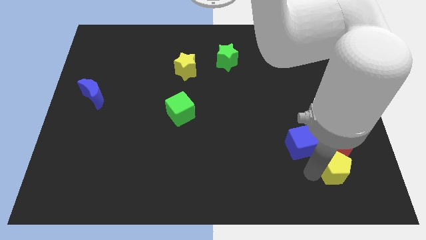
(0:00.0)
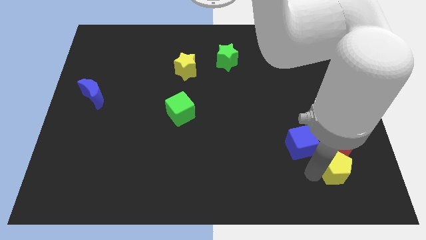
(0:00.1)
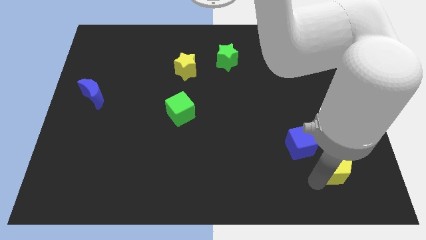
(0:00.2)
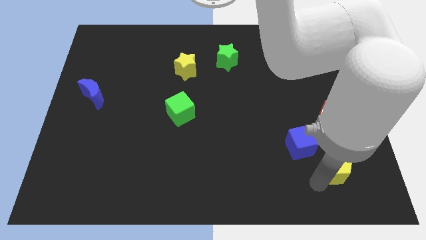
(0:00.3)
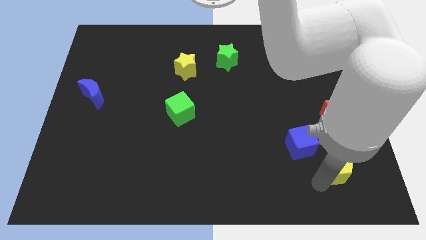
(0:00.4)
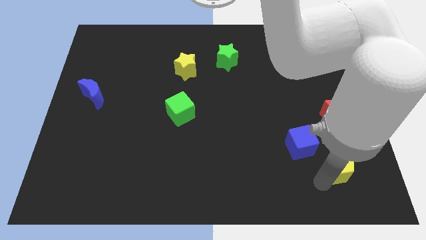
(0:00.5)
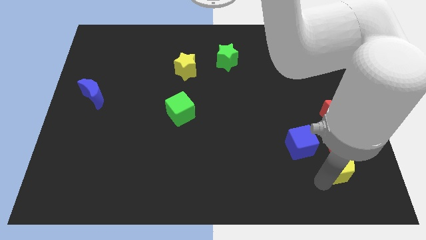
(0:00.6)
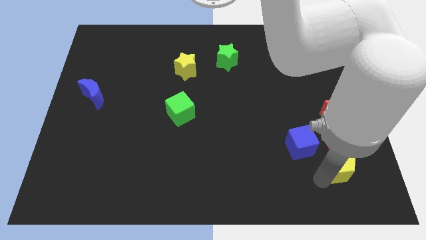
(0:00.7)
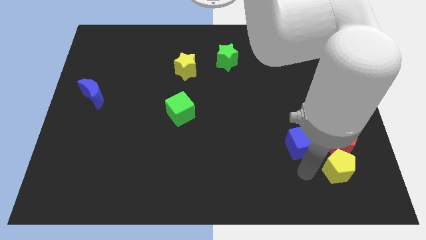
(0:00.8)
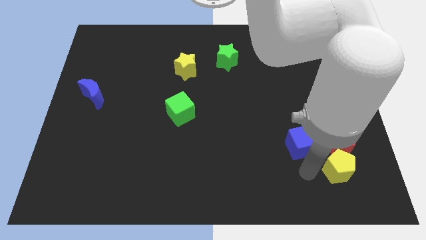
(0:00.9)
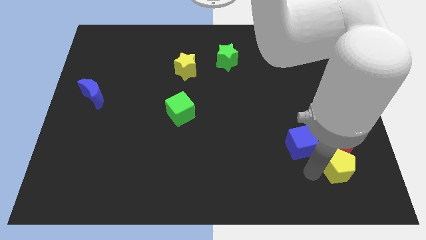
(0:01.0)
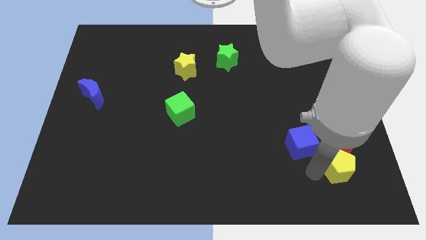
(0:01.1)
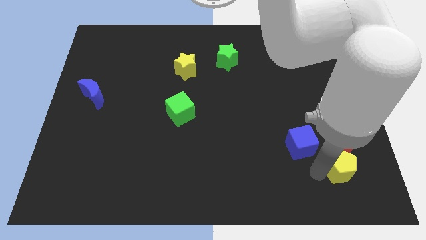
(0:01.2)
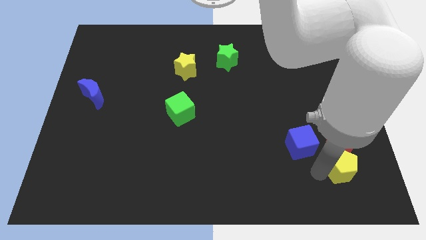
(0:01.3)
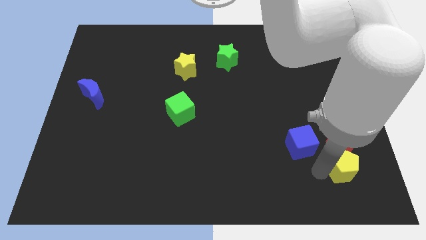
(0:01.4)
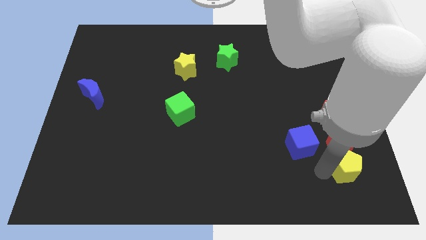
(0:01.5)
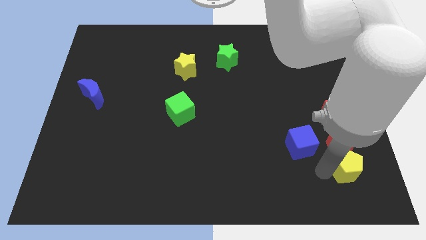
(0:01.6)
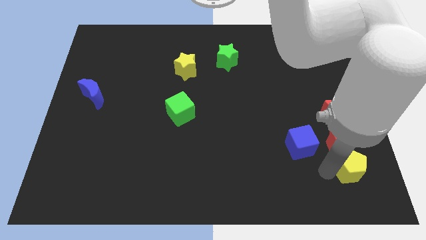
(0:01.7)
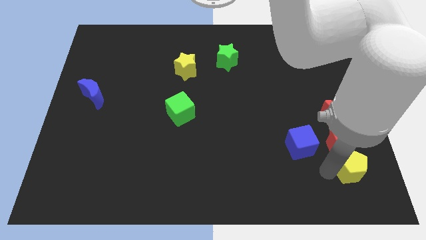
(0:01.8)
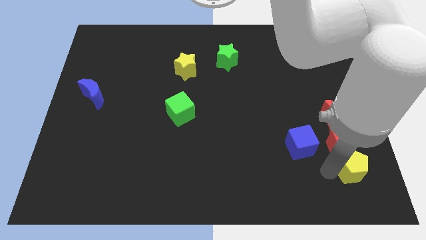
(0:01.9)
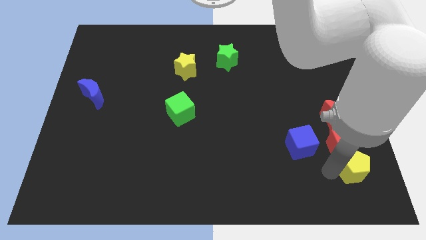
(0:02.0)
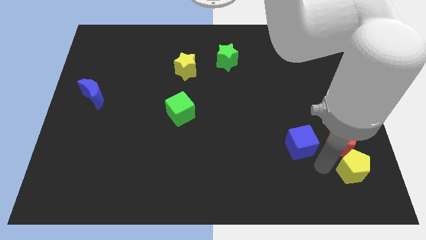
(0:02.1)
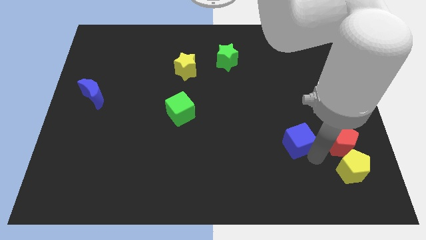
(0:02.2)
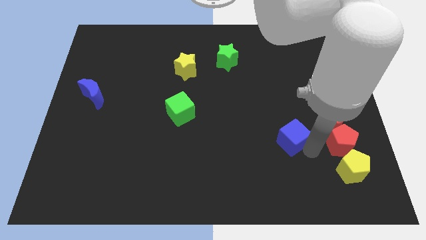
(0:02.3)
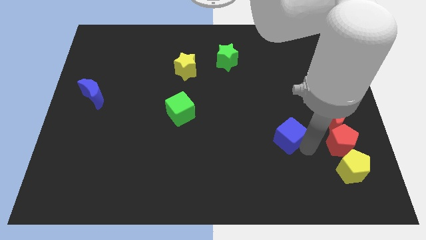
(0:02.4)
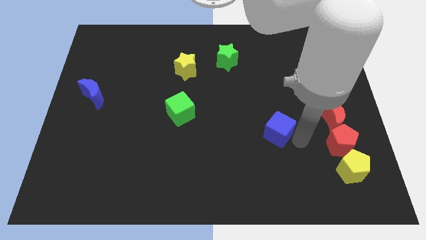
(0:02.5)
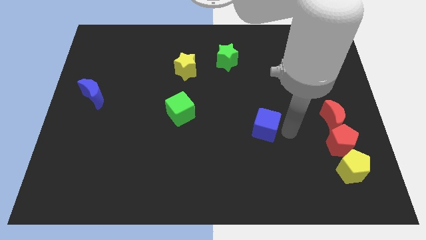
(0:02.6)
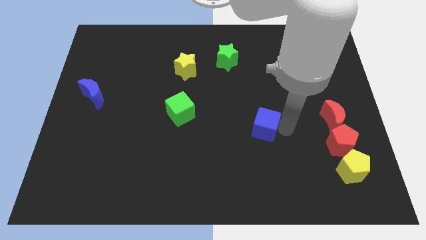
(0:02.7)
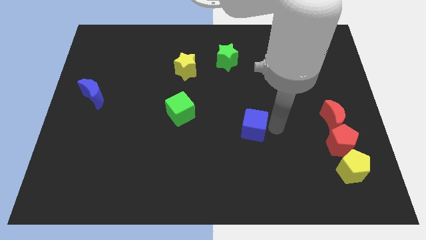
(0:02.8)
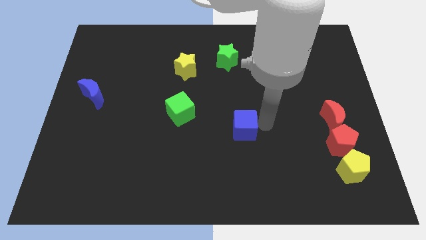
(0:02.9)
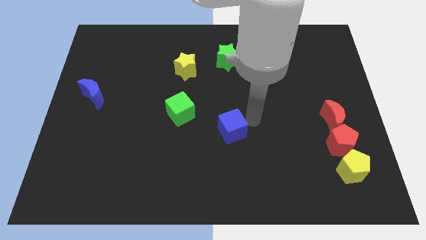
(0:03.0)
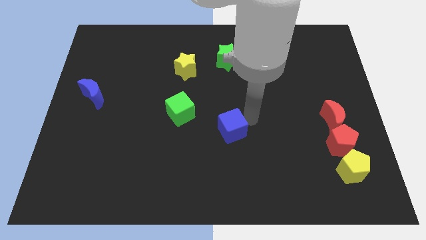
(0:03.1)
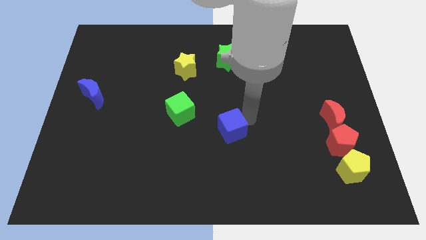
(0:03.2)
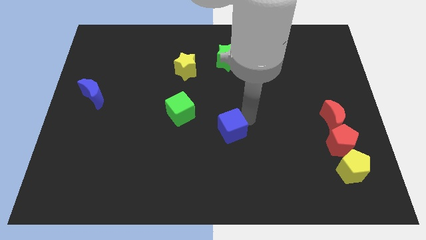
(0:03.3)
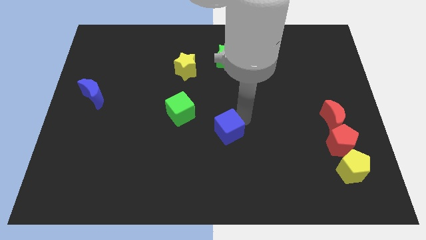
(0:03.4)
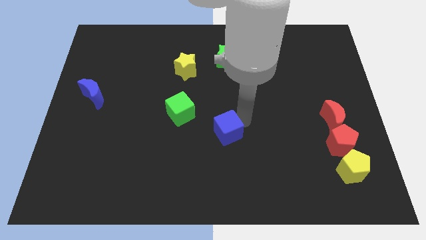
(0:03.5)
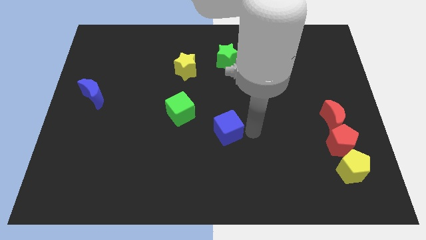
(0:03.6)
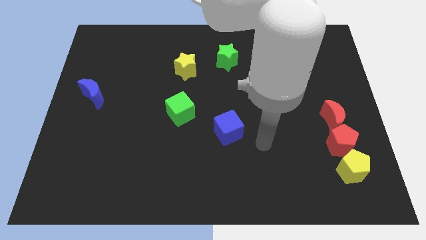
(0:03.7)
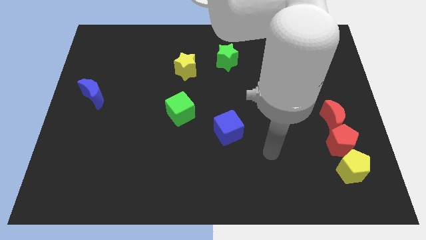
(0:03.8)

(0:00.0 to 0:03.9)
put the blue cube to the bottom right of the green cube

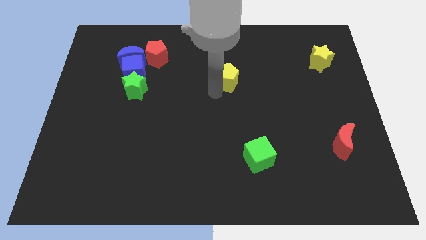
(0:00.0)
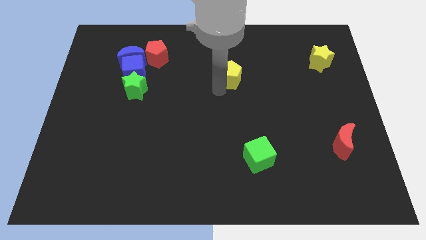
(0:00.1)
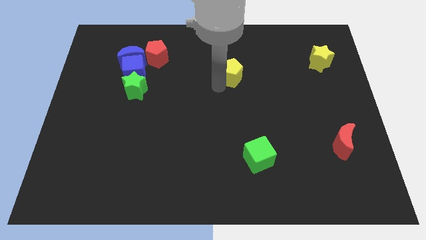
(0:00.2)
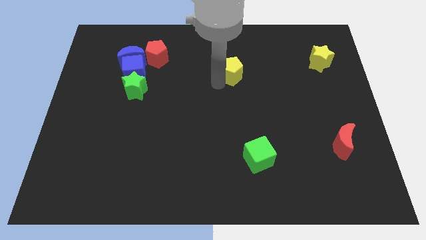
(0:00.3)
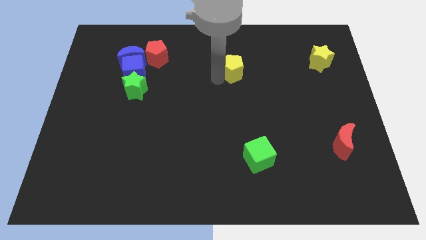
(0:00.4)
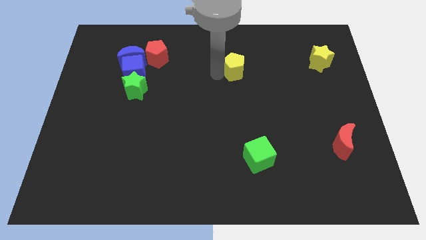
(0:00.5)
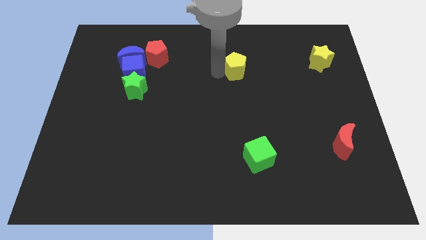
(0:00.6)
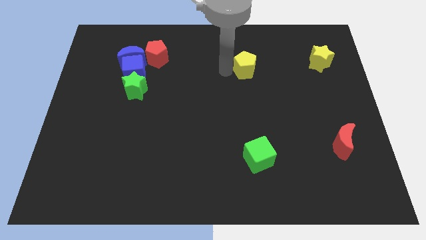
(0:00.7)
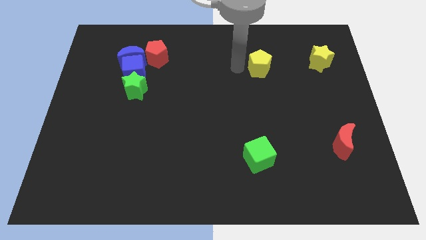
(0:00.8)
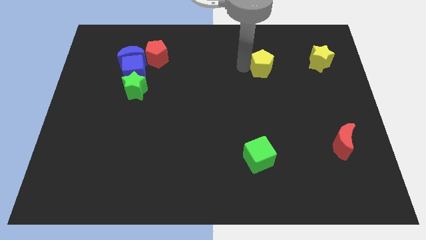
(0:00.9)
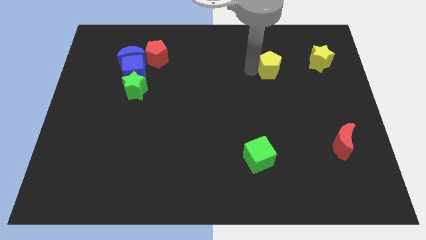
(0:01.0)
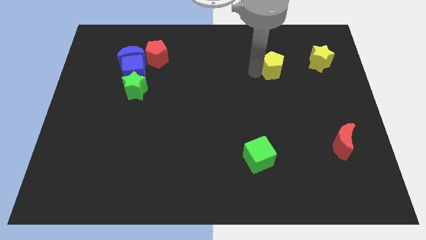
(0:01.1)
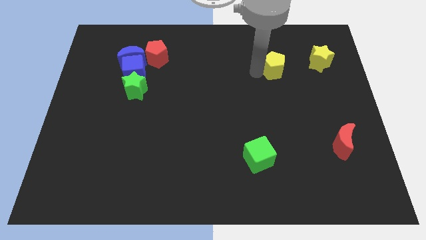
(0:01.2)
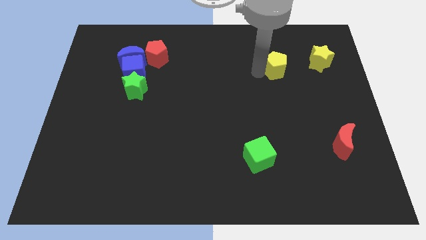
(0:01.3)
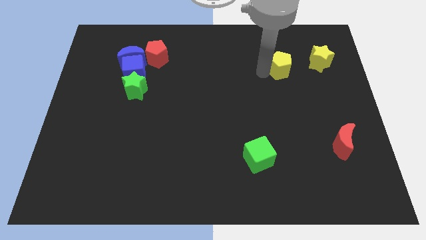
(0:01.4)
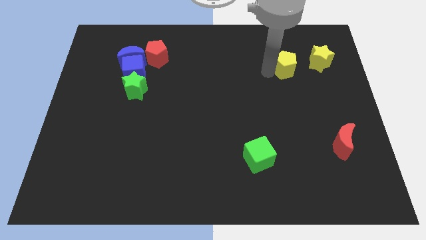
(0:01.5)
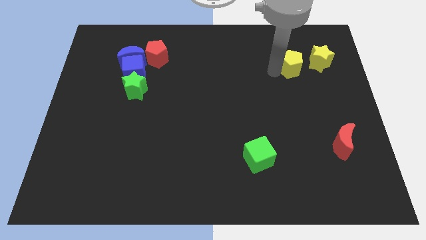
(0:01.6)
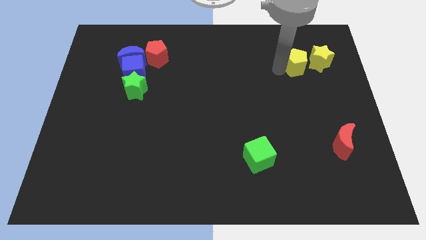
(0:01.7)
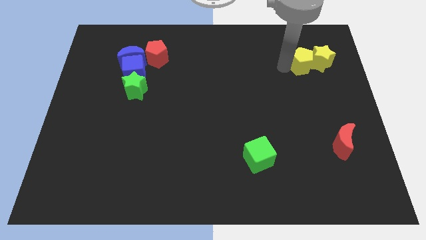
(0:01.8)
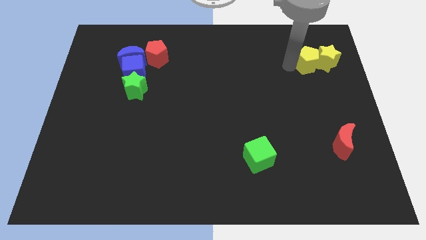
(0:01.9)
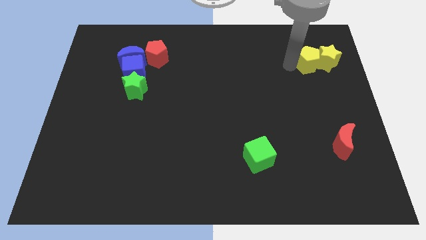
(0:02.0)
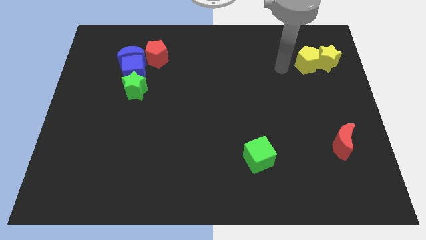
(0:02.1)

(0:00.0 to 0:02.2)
put the yellow pentagon into the yellow star

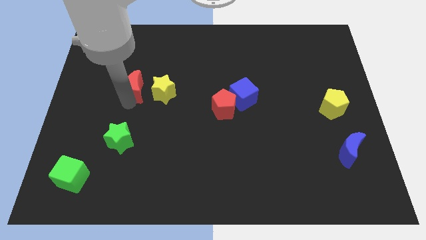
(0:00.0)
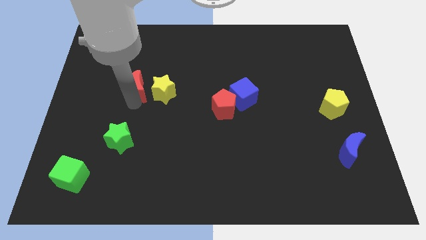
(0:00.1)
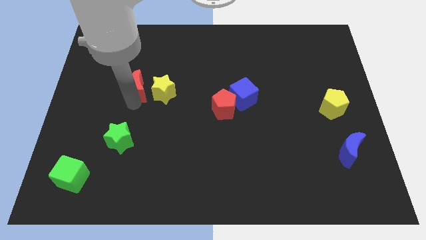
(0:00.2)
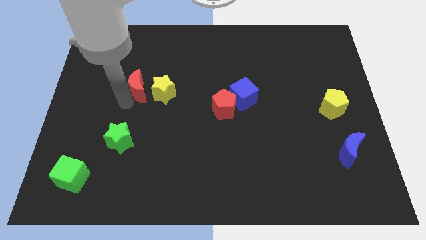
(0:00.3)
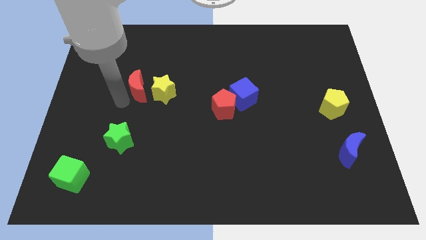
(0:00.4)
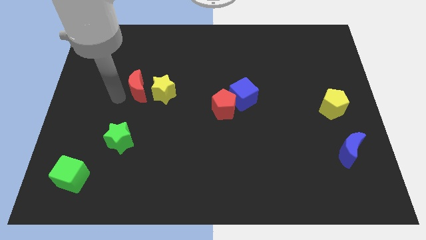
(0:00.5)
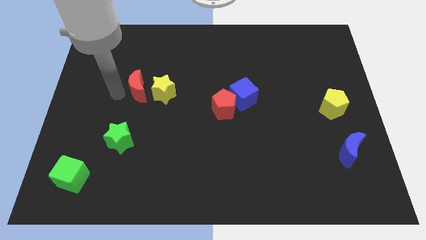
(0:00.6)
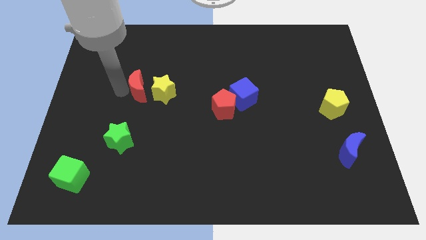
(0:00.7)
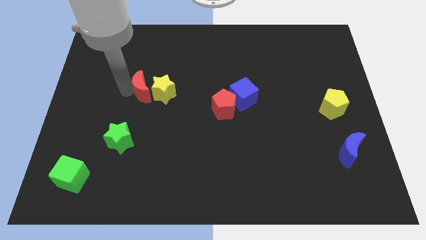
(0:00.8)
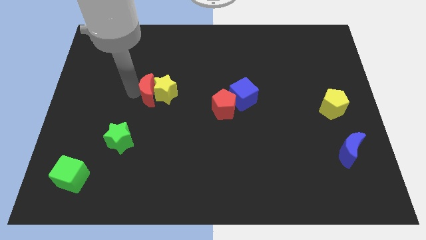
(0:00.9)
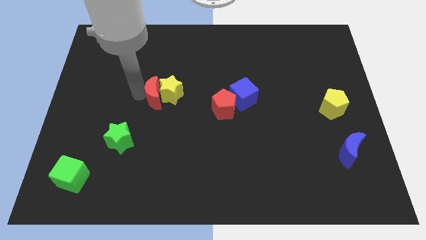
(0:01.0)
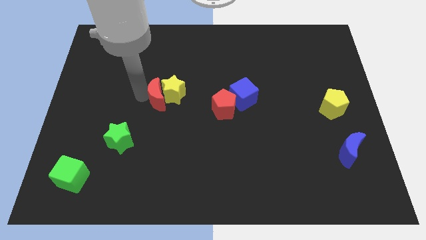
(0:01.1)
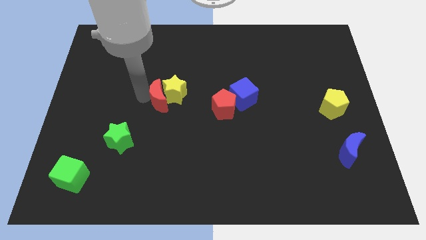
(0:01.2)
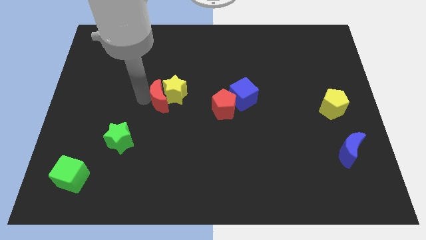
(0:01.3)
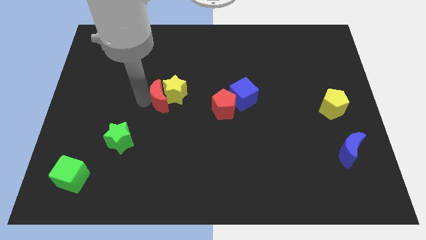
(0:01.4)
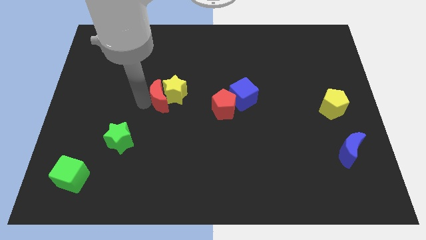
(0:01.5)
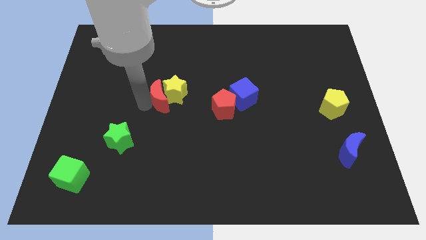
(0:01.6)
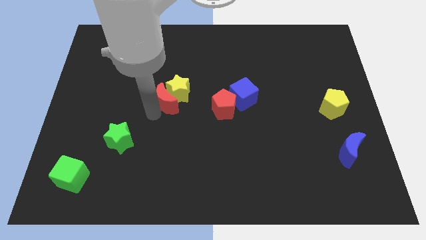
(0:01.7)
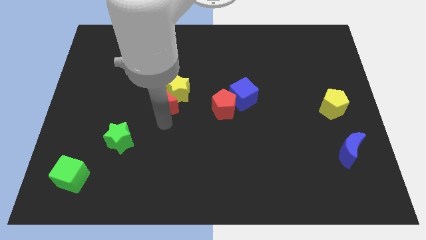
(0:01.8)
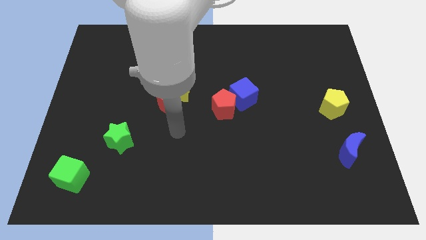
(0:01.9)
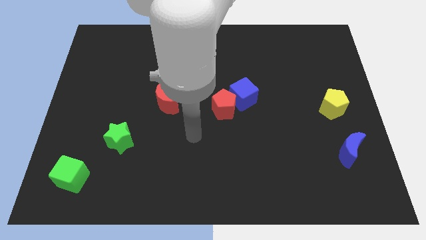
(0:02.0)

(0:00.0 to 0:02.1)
push the red moon into yellow star towards right

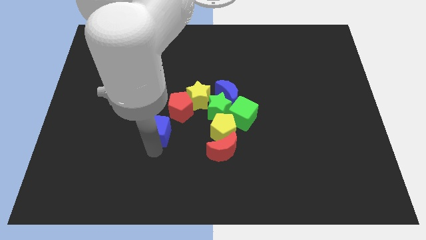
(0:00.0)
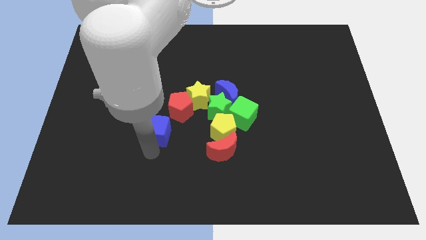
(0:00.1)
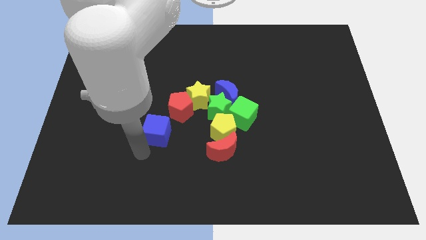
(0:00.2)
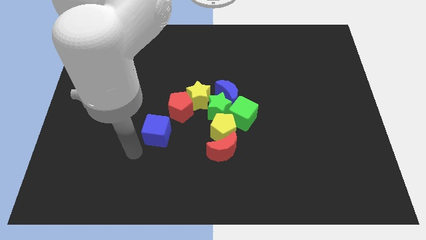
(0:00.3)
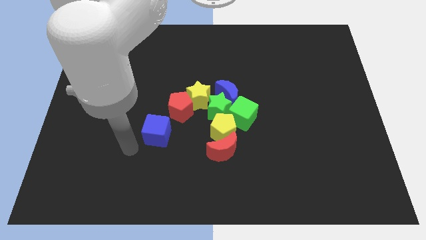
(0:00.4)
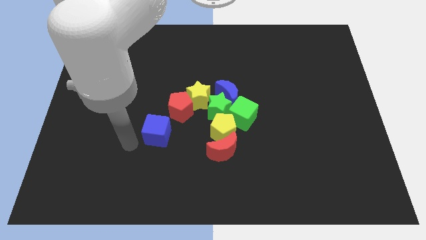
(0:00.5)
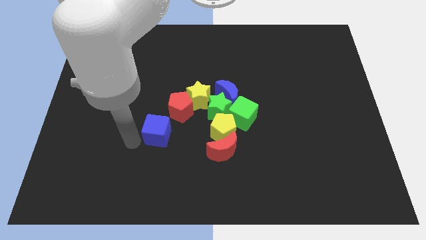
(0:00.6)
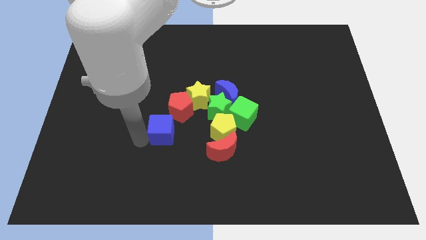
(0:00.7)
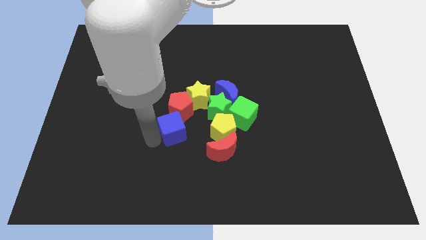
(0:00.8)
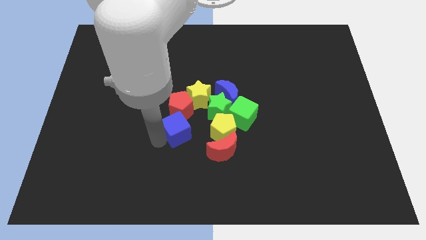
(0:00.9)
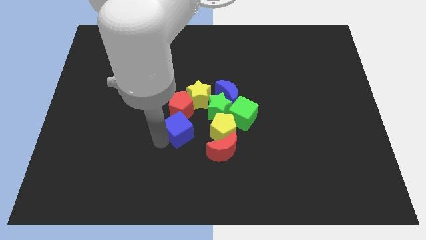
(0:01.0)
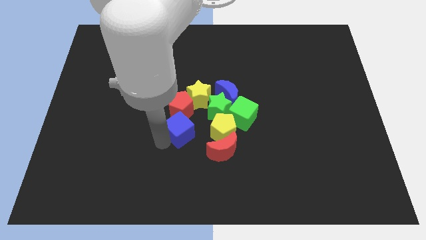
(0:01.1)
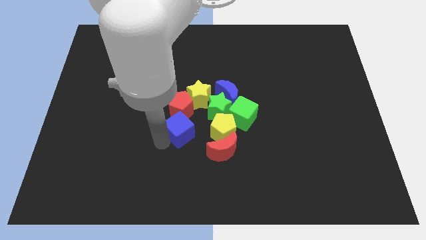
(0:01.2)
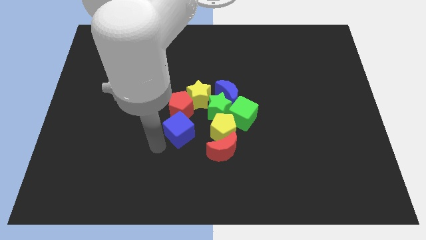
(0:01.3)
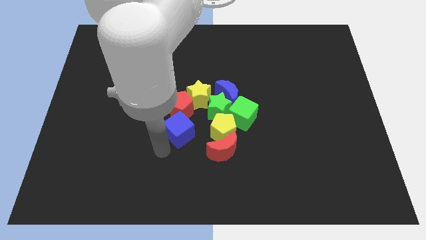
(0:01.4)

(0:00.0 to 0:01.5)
place the blue cube below the red pentagon
